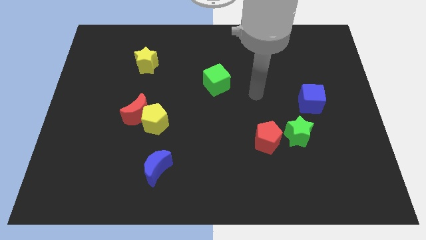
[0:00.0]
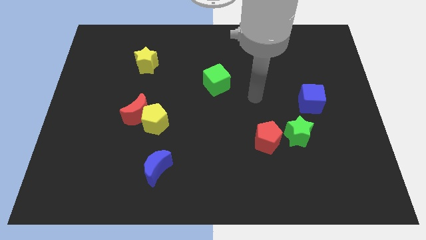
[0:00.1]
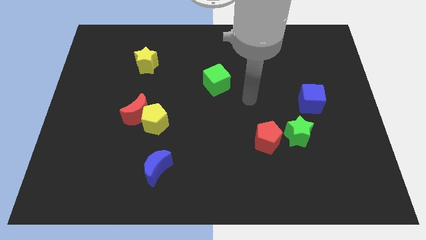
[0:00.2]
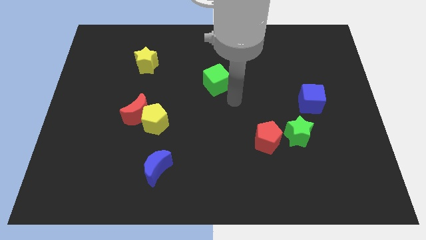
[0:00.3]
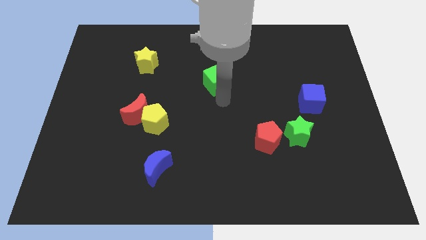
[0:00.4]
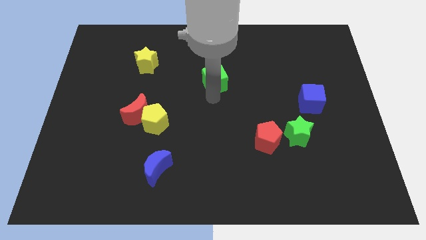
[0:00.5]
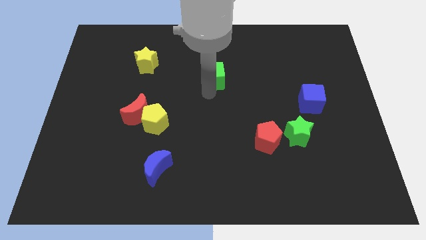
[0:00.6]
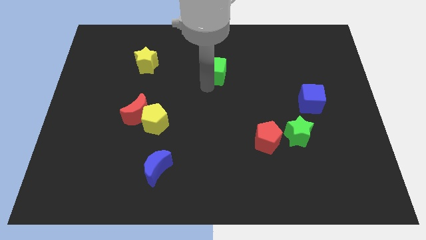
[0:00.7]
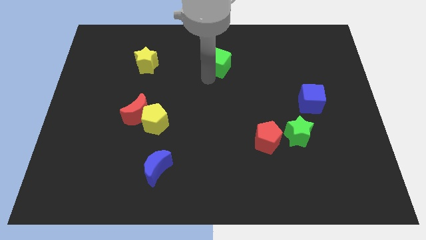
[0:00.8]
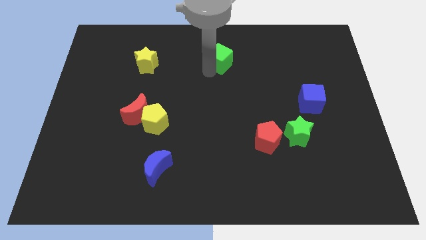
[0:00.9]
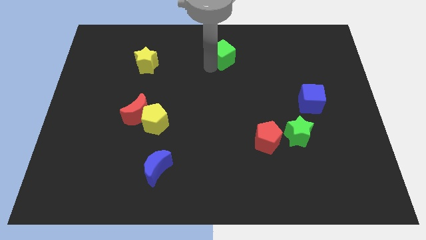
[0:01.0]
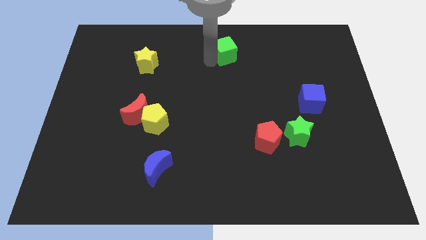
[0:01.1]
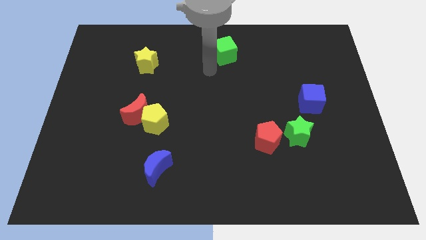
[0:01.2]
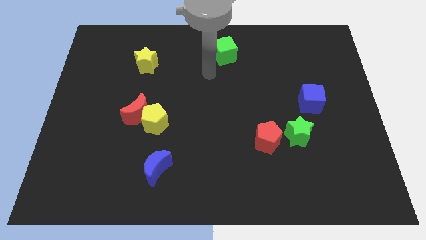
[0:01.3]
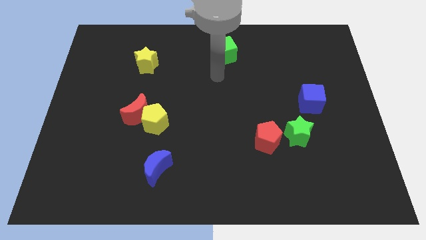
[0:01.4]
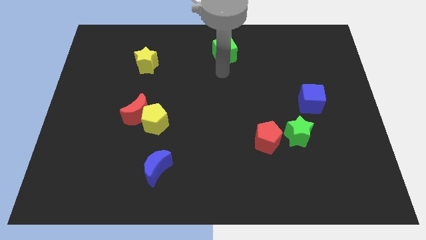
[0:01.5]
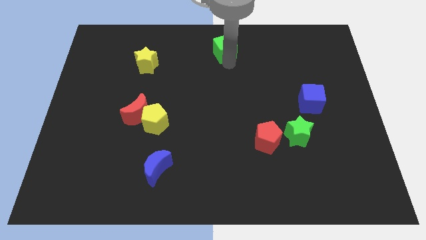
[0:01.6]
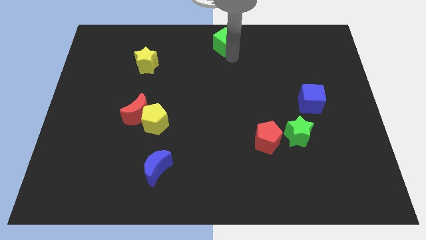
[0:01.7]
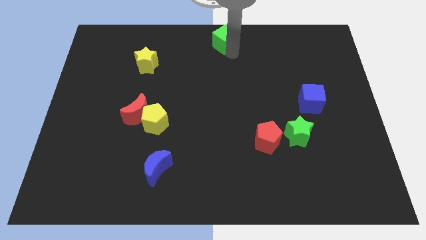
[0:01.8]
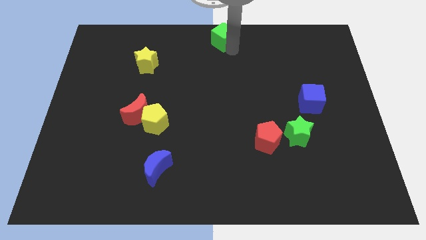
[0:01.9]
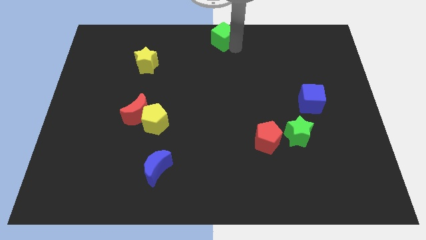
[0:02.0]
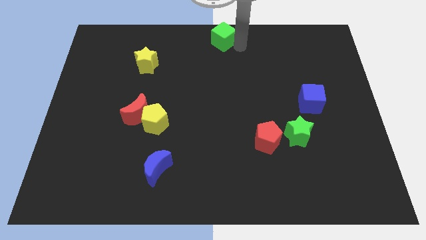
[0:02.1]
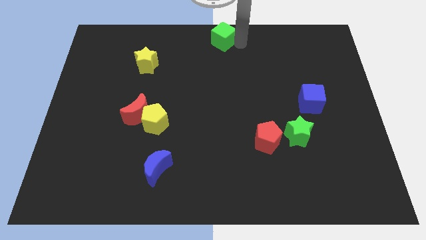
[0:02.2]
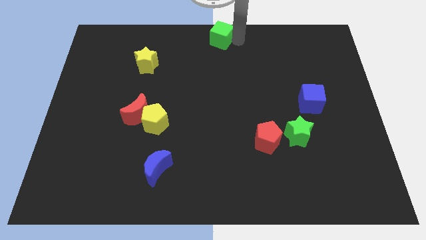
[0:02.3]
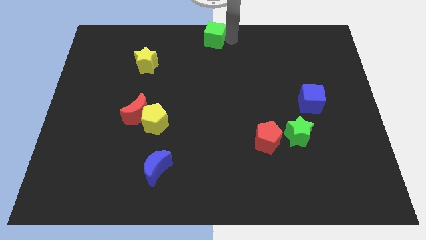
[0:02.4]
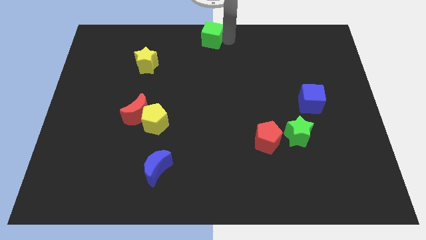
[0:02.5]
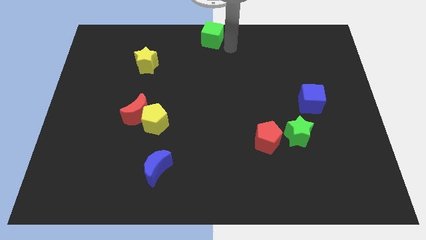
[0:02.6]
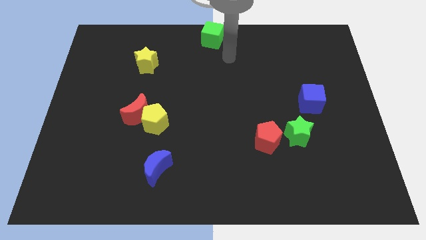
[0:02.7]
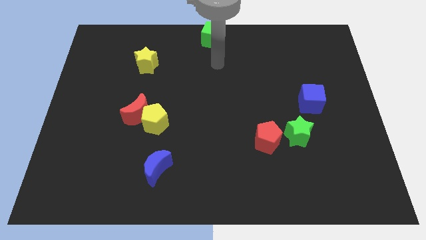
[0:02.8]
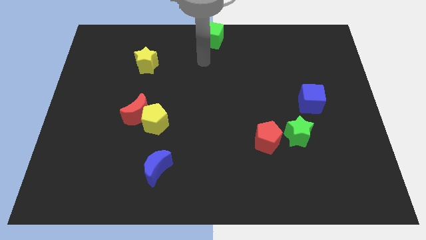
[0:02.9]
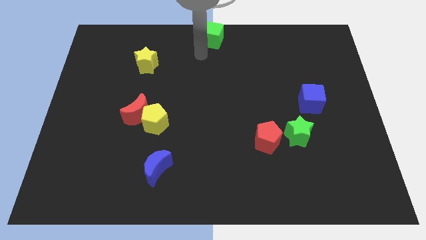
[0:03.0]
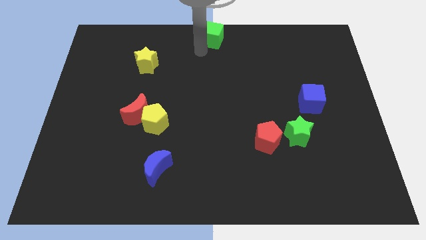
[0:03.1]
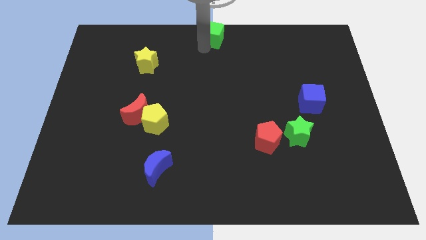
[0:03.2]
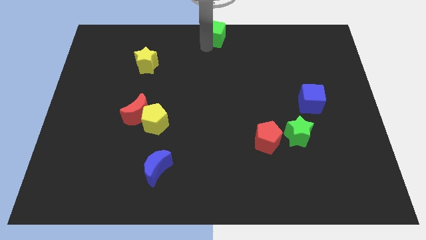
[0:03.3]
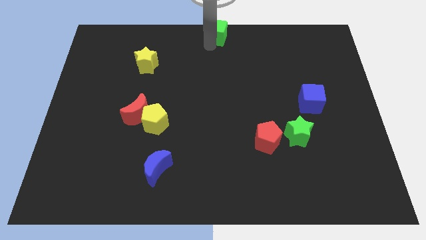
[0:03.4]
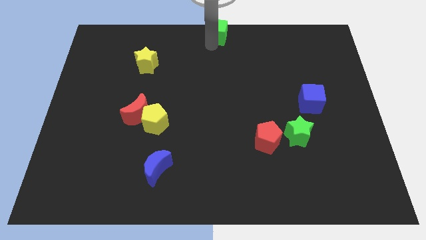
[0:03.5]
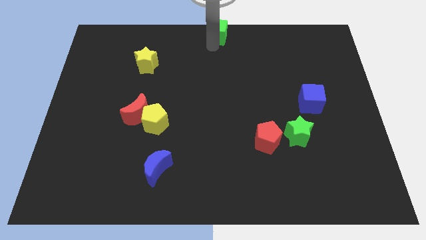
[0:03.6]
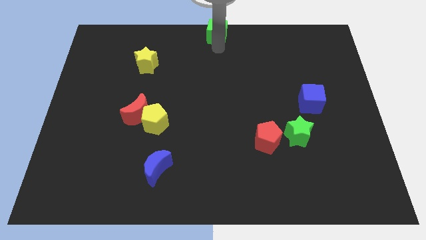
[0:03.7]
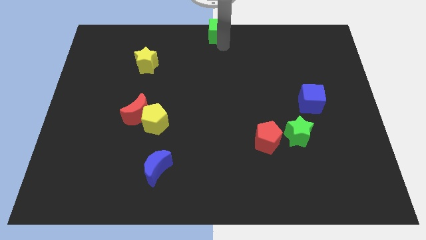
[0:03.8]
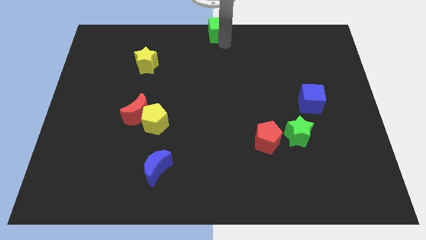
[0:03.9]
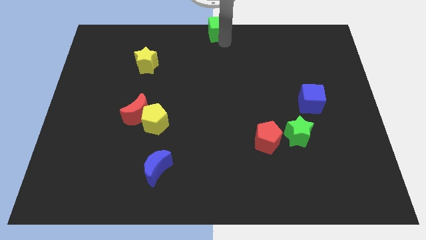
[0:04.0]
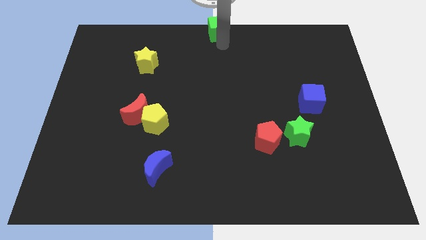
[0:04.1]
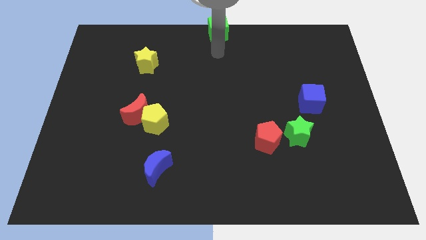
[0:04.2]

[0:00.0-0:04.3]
move green cube to the top center

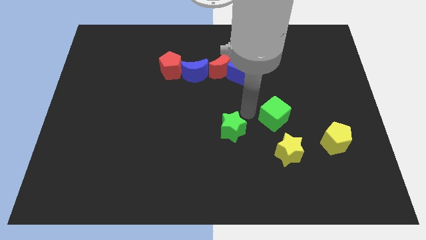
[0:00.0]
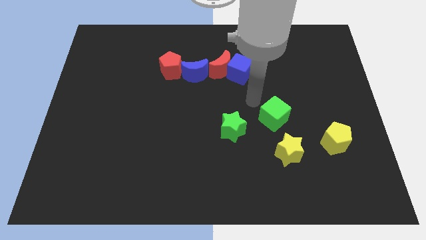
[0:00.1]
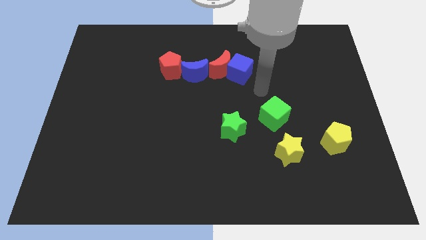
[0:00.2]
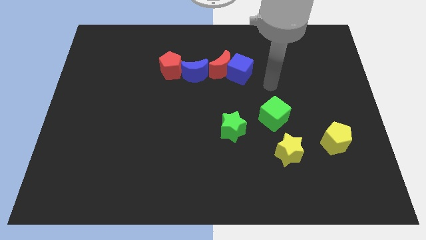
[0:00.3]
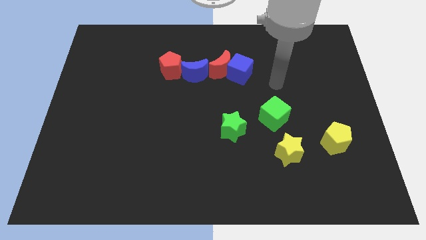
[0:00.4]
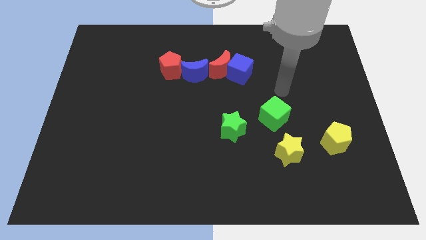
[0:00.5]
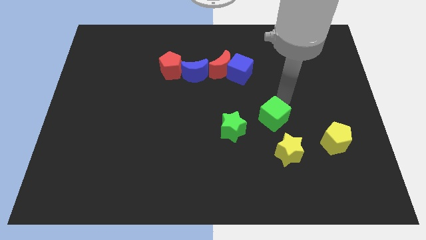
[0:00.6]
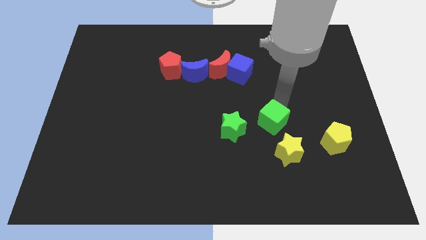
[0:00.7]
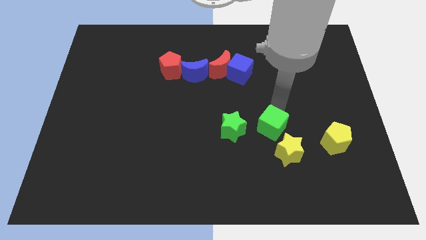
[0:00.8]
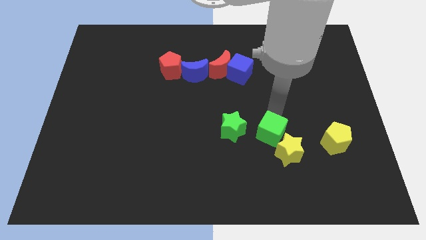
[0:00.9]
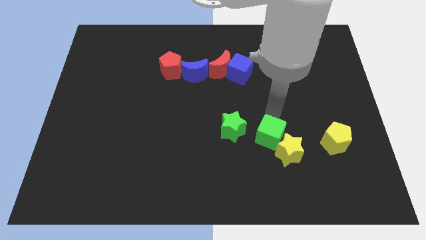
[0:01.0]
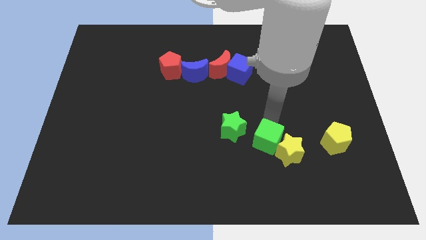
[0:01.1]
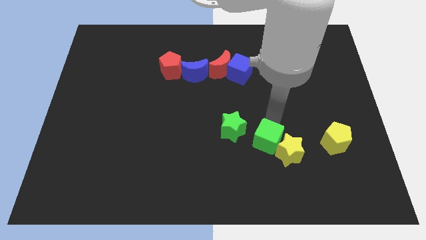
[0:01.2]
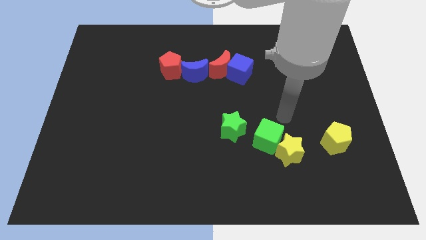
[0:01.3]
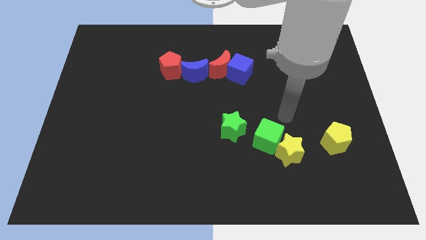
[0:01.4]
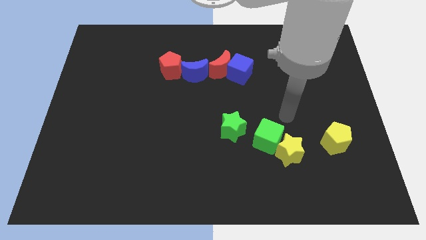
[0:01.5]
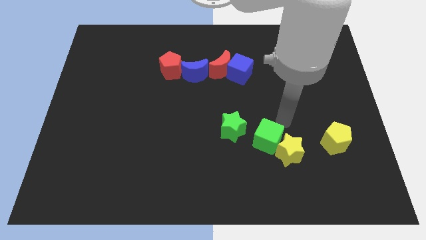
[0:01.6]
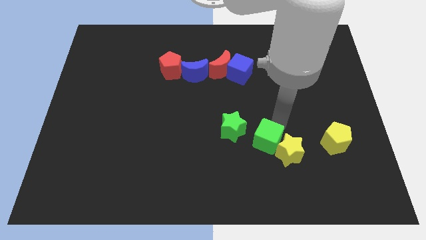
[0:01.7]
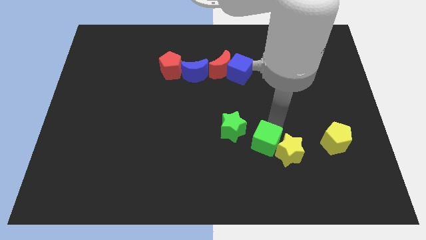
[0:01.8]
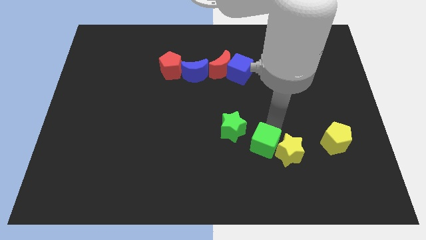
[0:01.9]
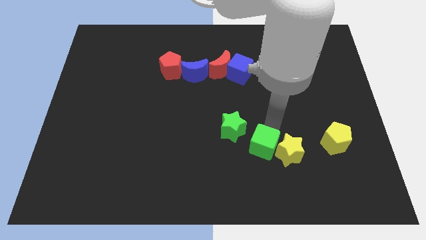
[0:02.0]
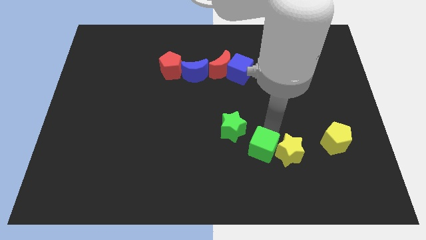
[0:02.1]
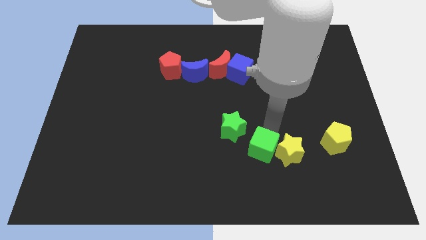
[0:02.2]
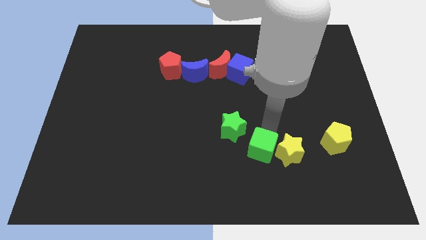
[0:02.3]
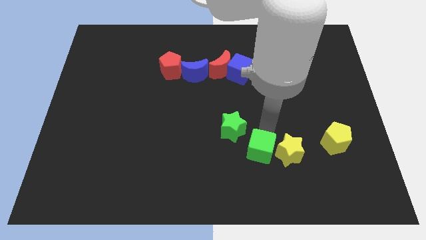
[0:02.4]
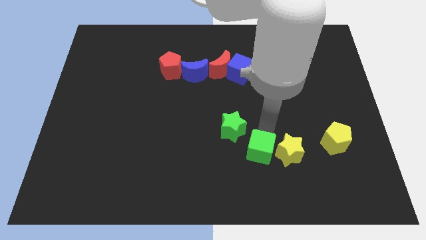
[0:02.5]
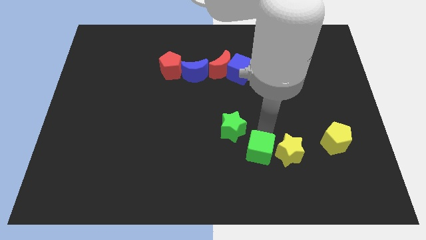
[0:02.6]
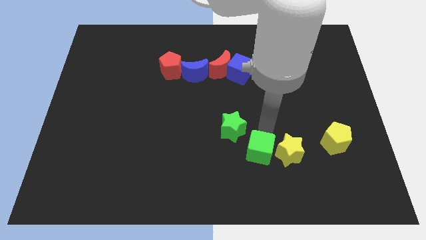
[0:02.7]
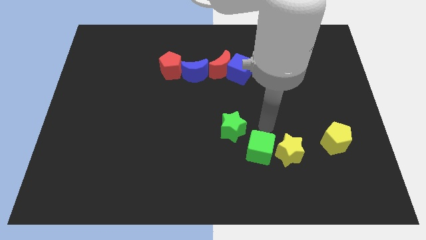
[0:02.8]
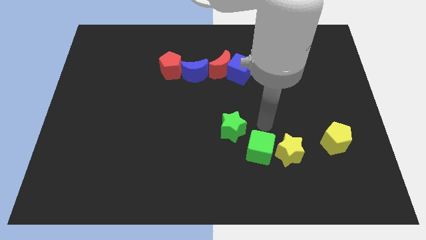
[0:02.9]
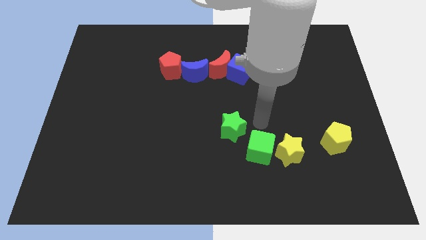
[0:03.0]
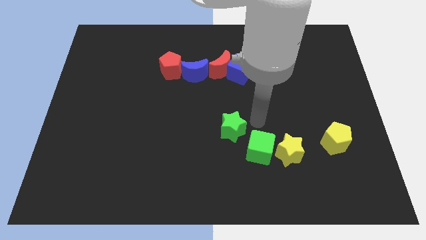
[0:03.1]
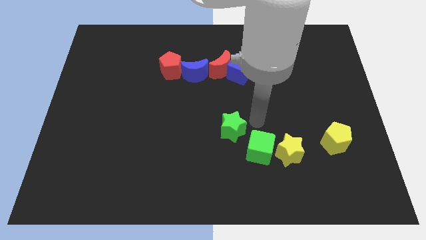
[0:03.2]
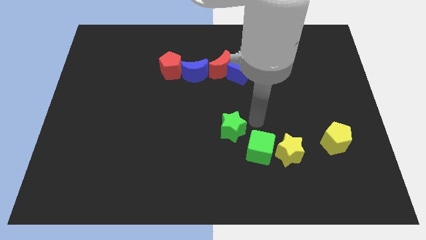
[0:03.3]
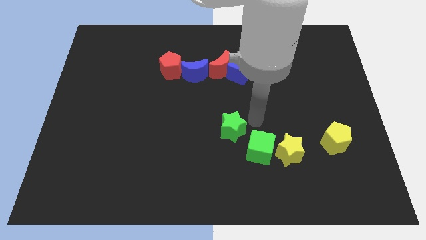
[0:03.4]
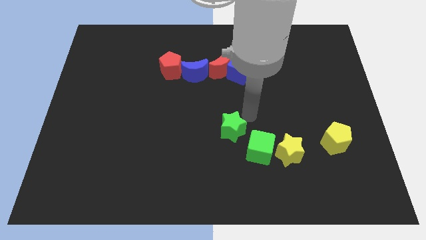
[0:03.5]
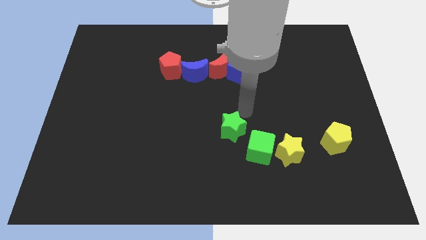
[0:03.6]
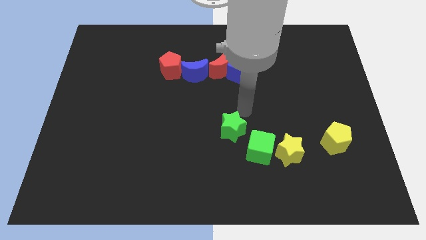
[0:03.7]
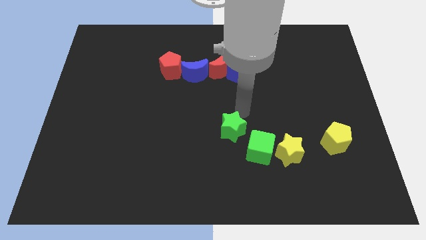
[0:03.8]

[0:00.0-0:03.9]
move the green cube left to the yellow star

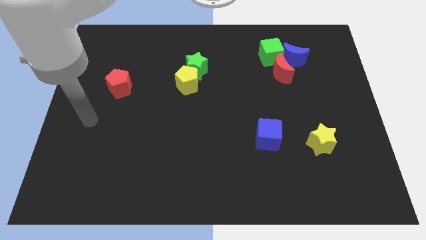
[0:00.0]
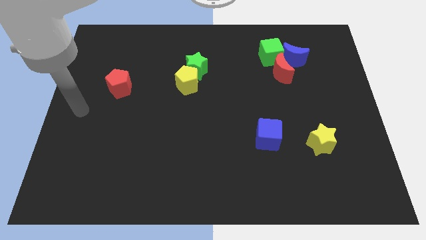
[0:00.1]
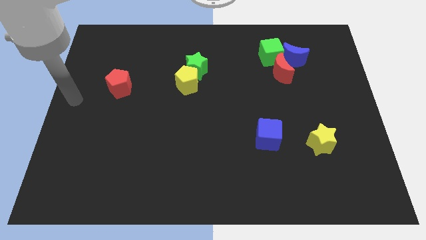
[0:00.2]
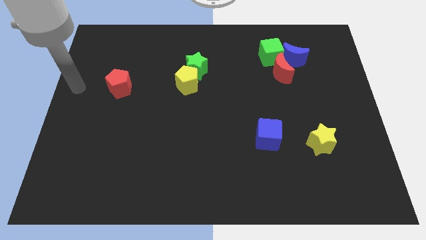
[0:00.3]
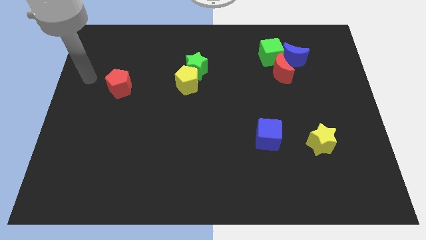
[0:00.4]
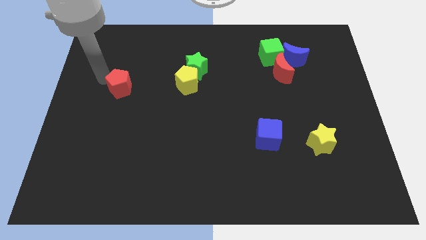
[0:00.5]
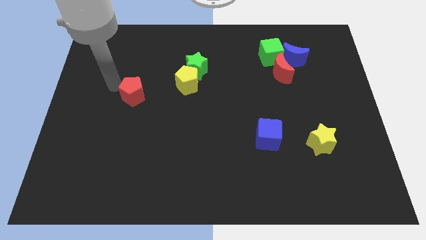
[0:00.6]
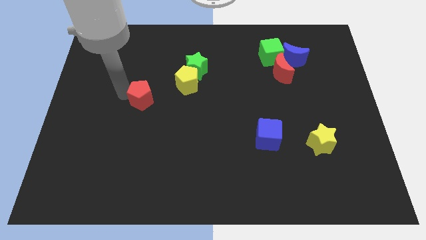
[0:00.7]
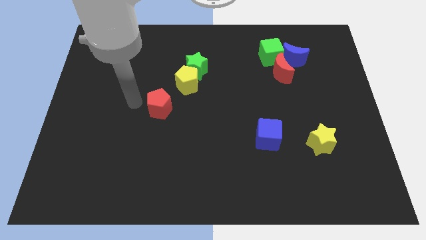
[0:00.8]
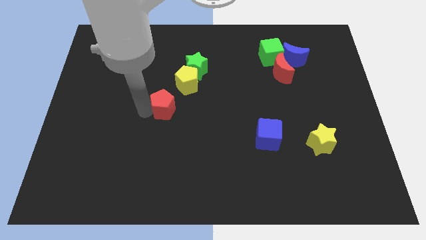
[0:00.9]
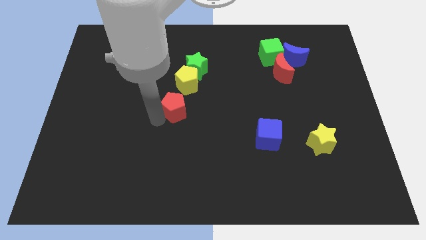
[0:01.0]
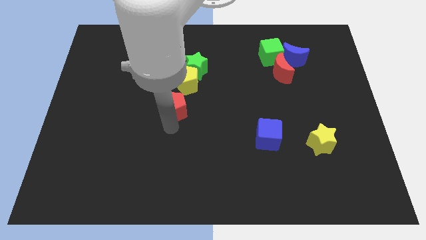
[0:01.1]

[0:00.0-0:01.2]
place red pentagon below yellow pentagon
